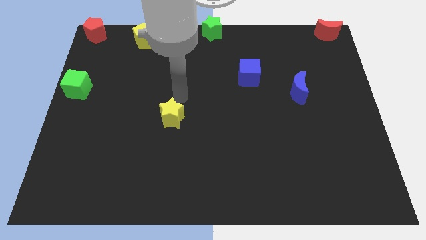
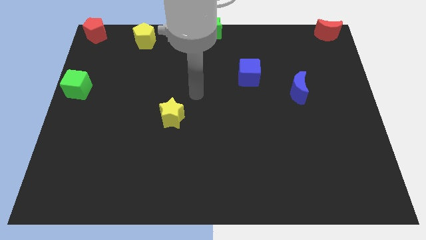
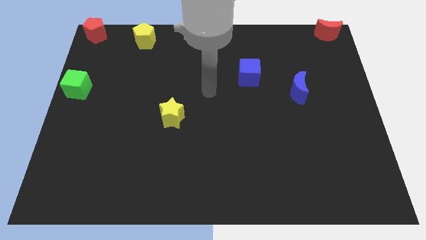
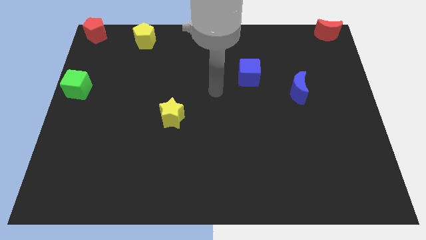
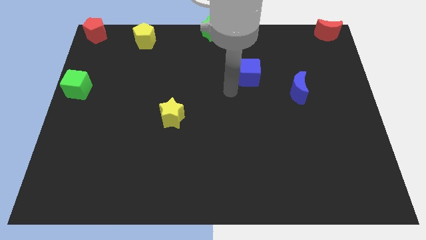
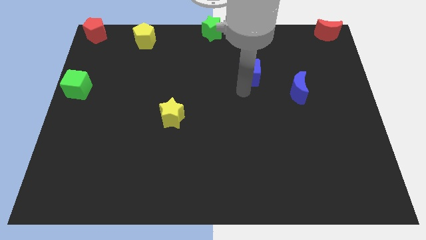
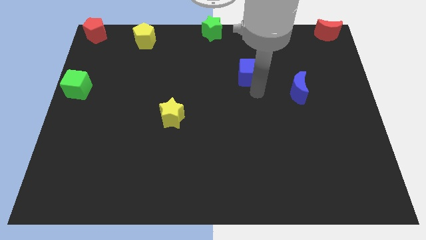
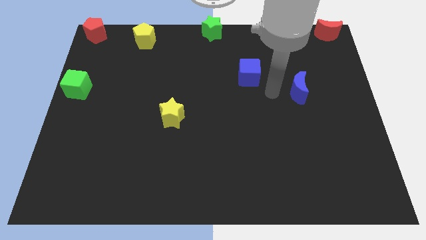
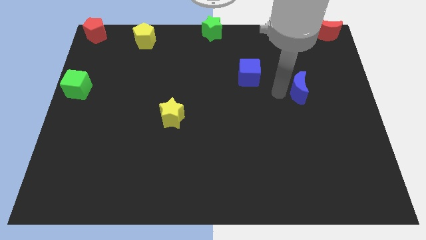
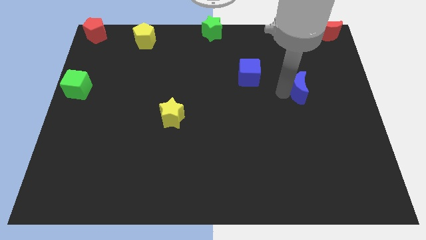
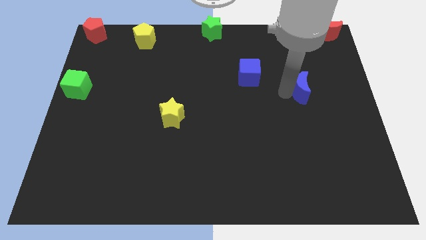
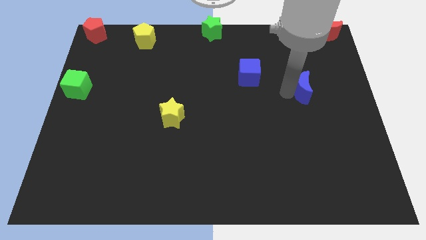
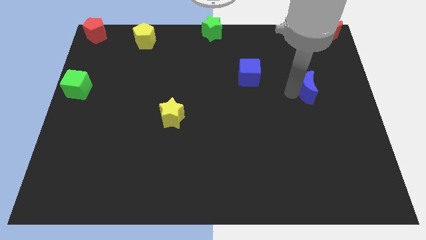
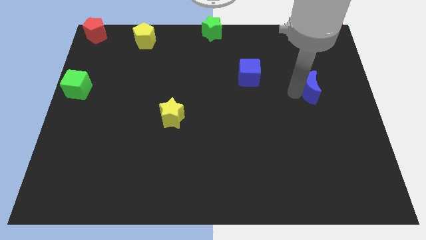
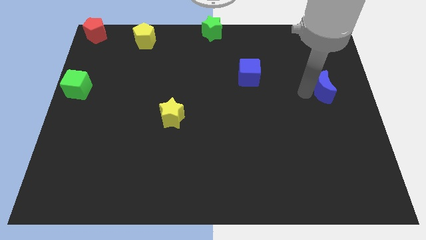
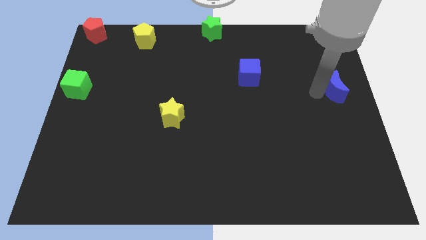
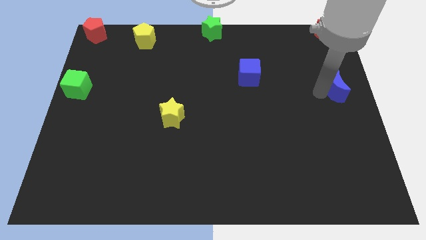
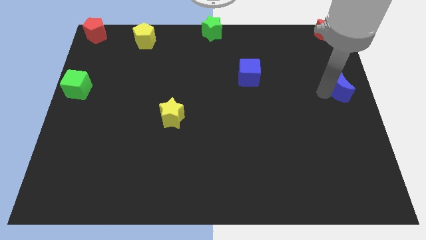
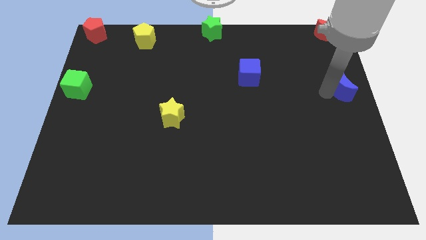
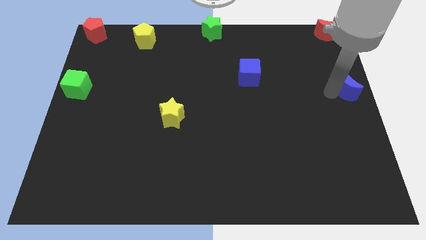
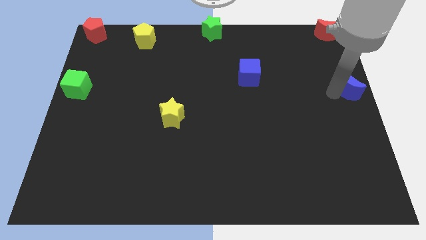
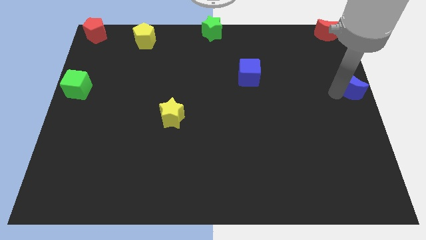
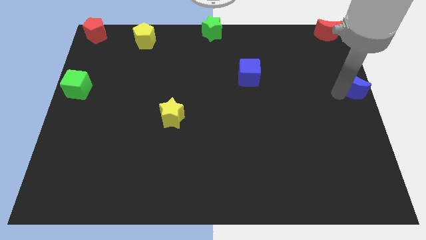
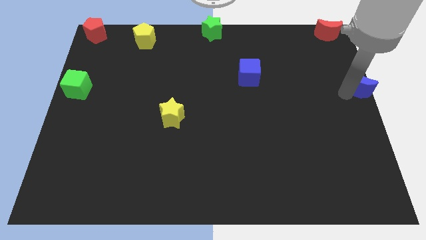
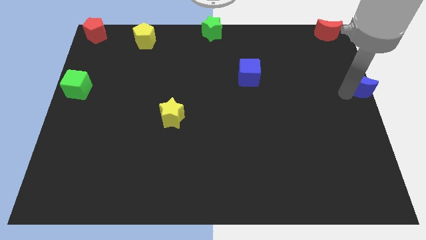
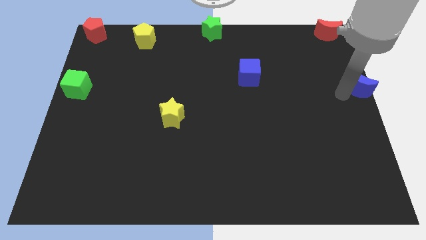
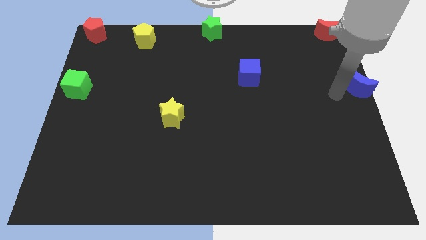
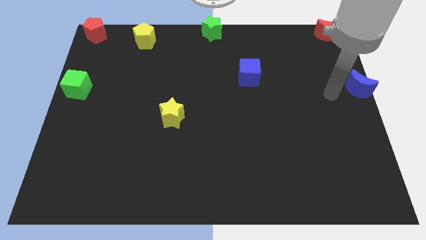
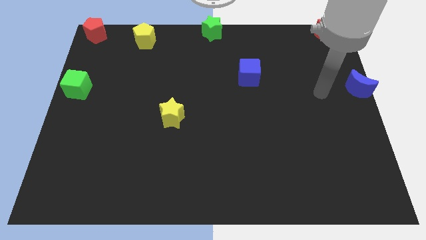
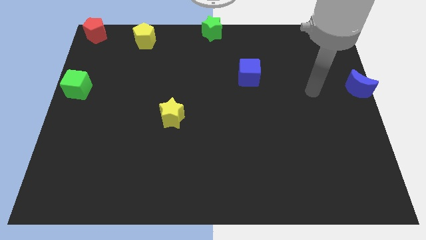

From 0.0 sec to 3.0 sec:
move the blue moon to the center right

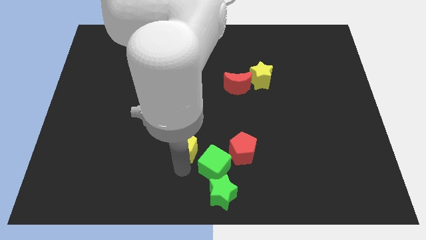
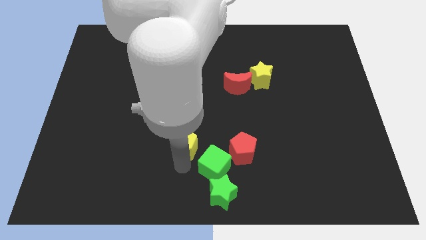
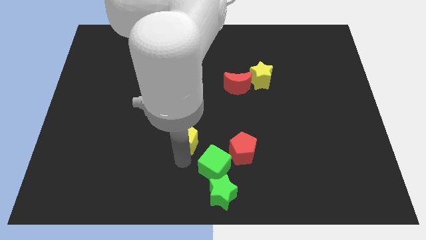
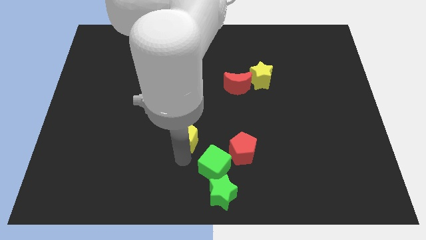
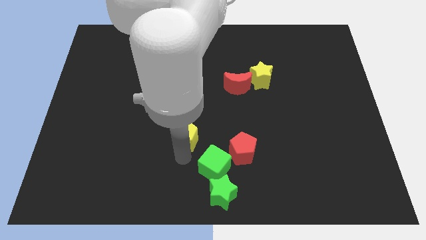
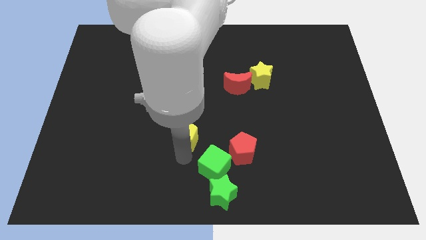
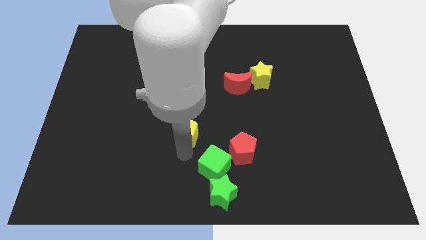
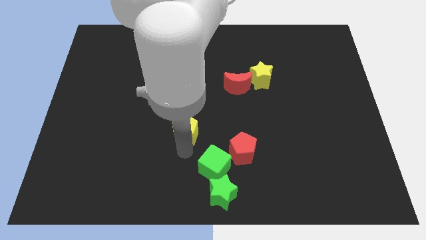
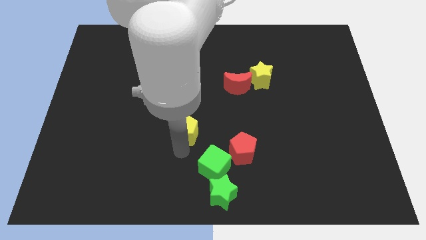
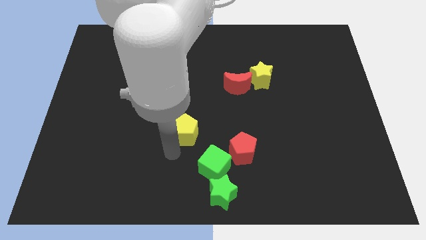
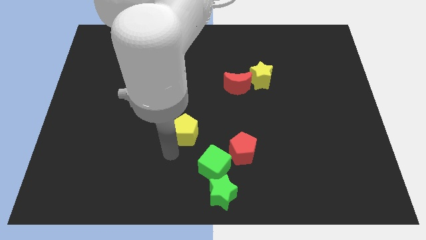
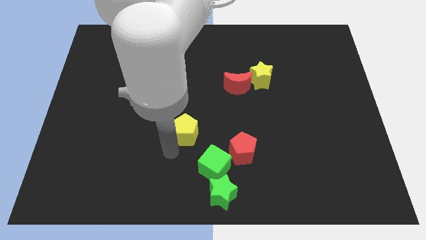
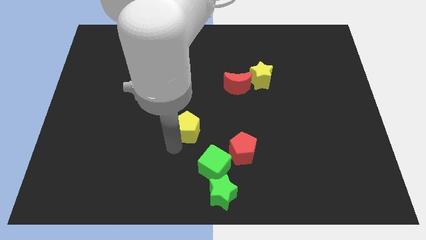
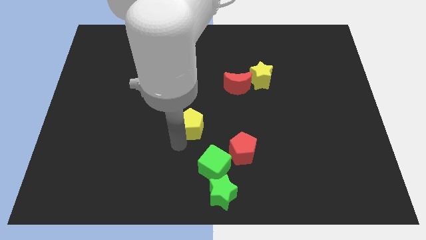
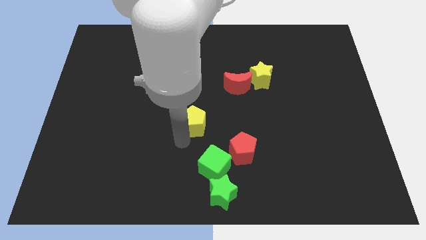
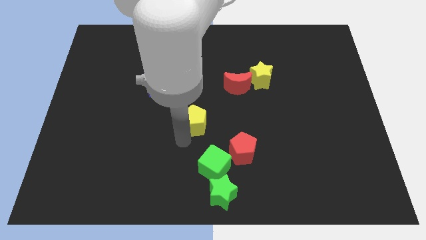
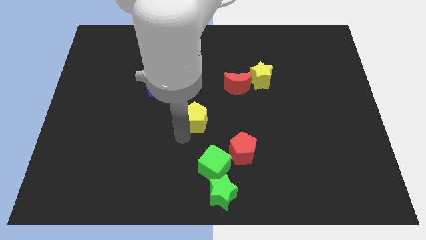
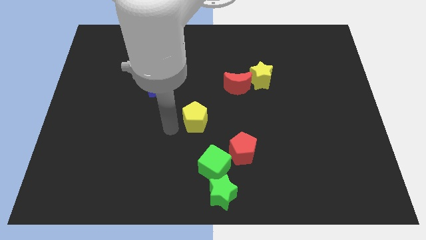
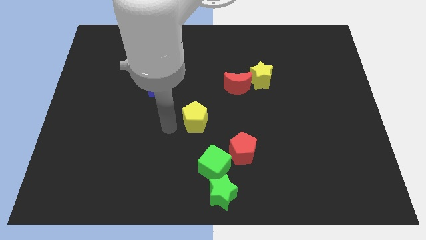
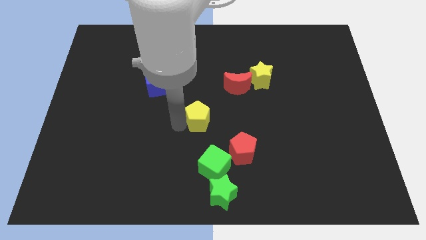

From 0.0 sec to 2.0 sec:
move the yellow pentagon to the center of the board

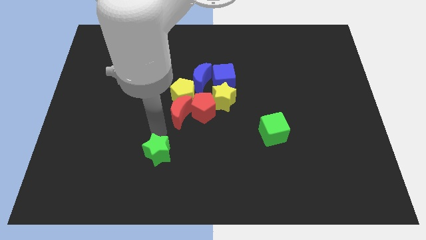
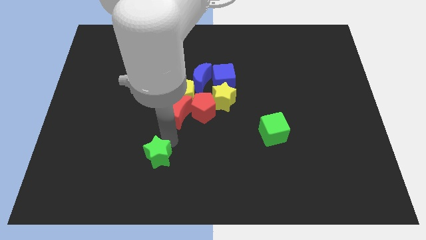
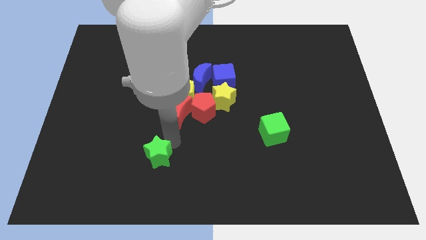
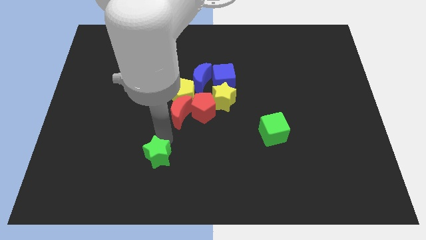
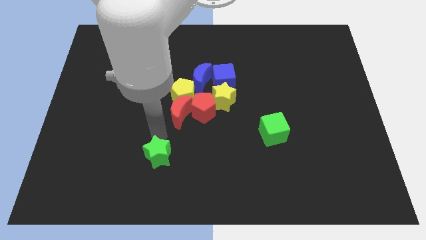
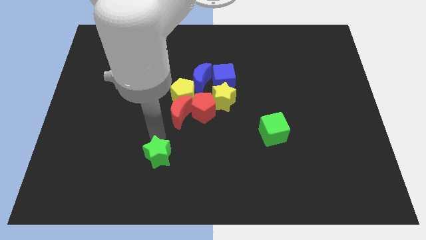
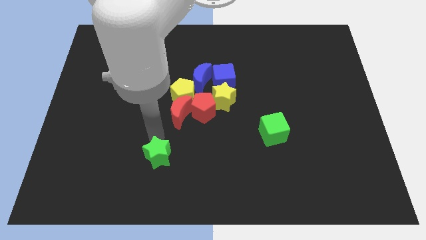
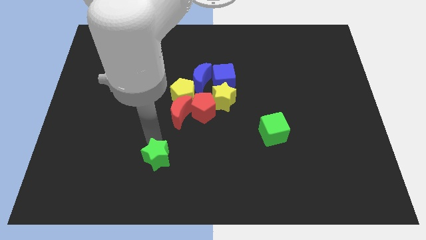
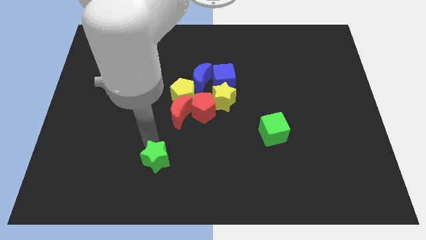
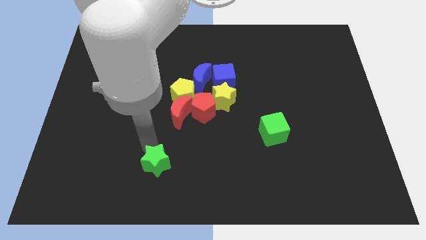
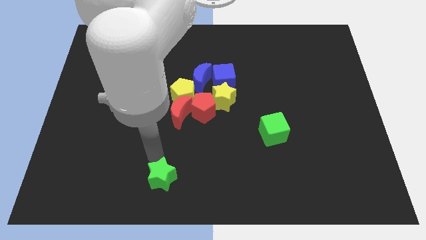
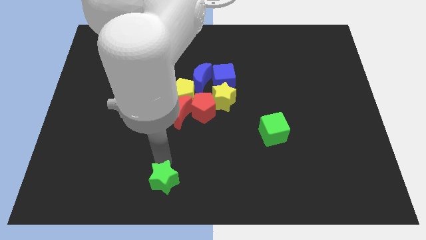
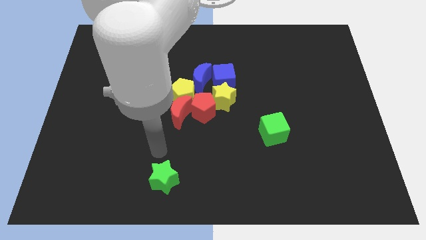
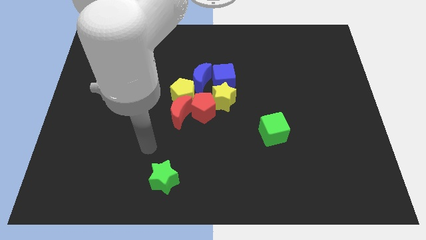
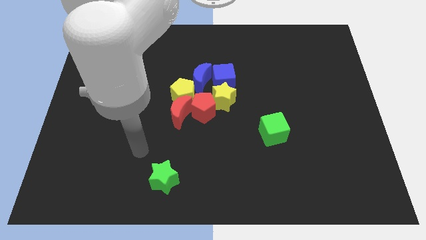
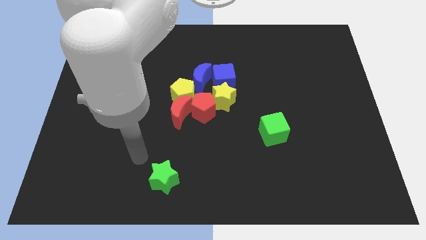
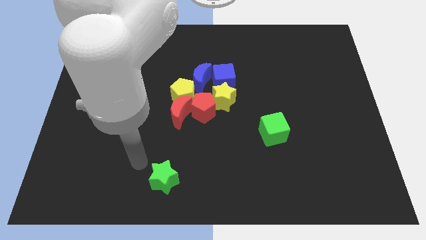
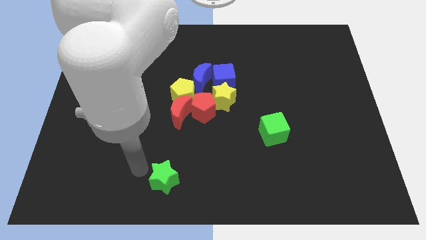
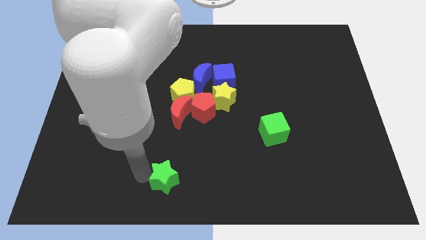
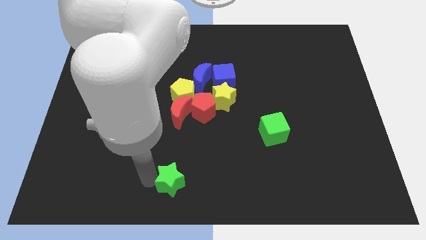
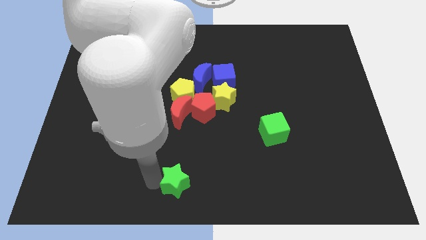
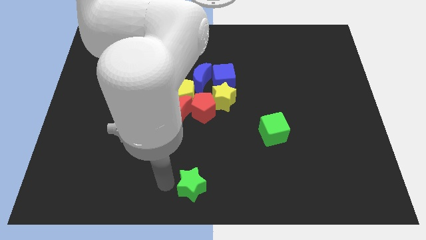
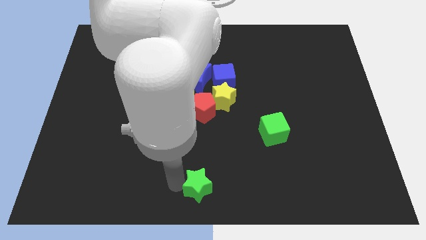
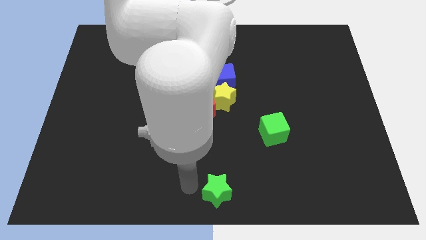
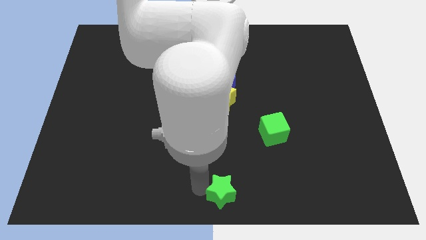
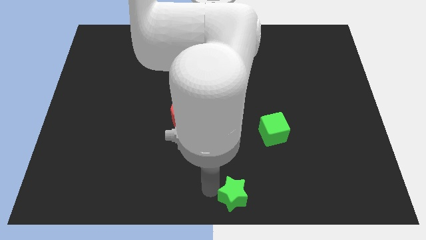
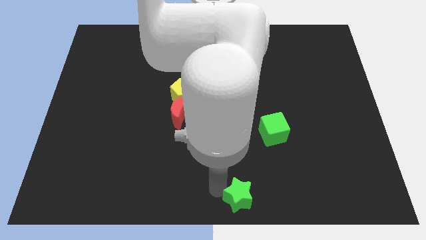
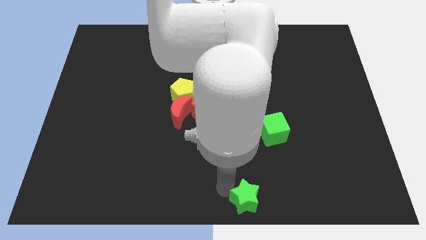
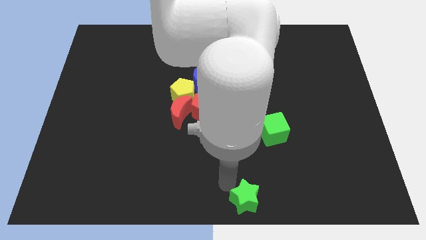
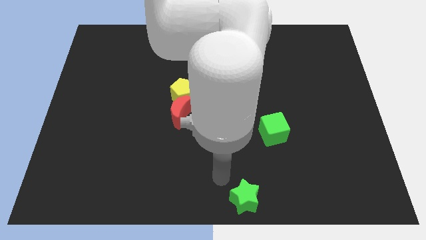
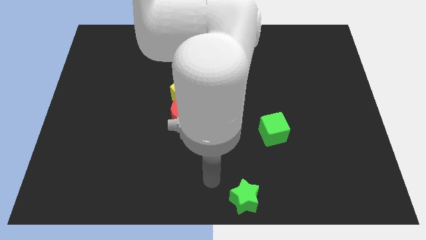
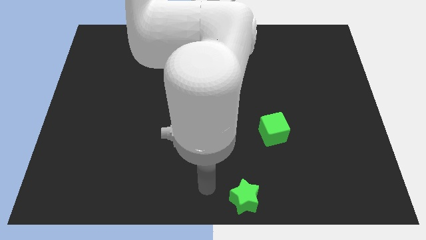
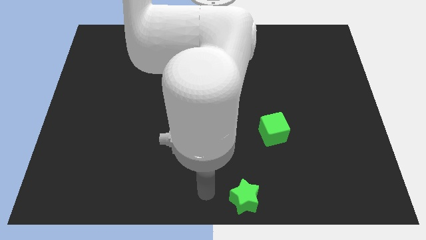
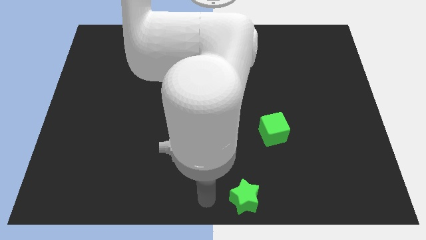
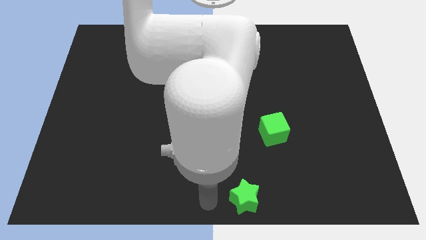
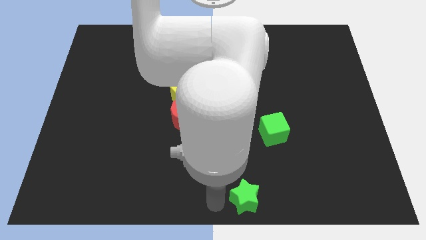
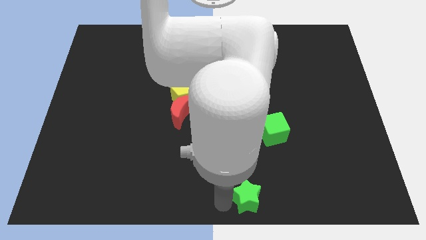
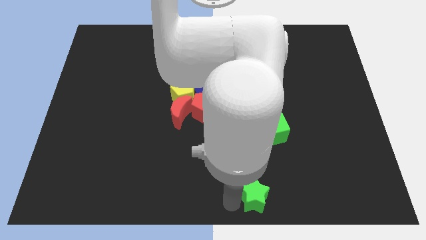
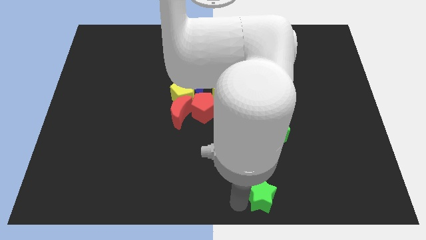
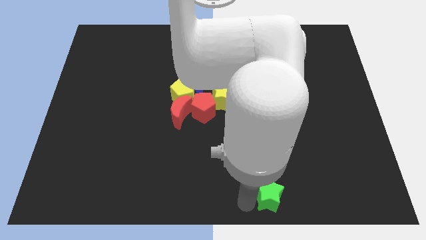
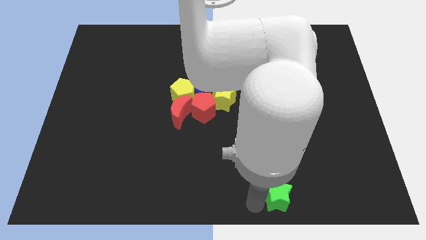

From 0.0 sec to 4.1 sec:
move the green star vertically below the green cube
